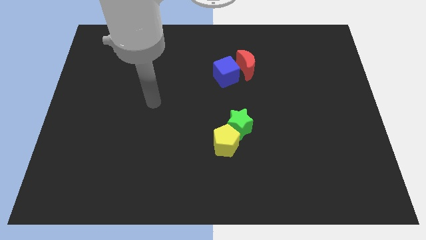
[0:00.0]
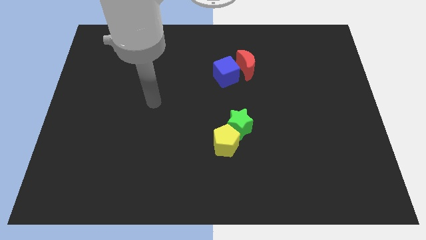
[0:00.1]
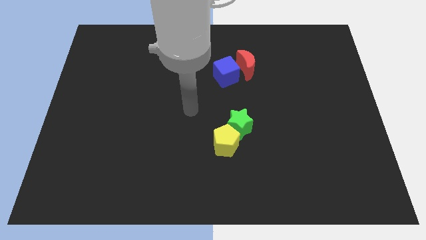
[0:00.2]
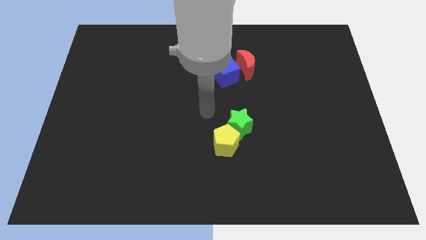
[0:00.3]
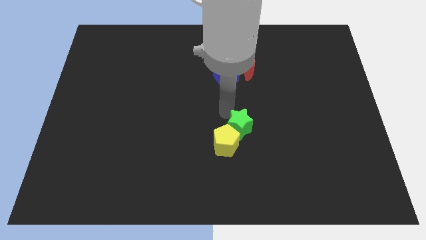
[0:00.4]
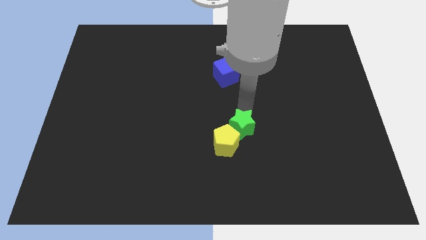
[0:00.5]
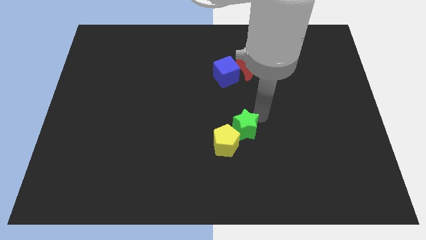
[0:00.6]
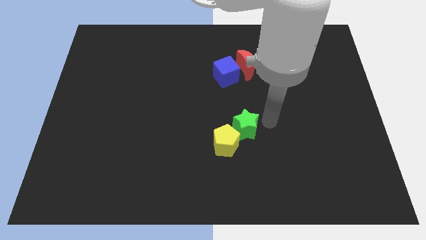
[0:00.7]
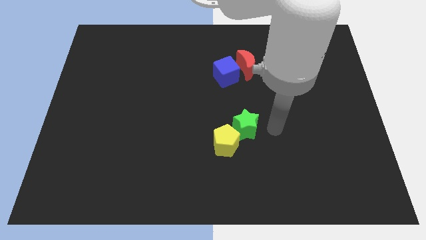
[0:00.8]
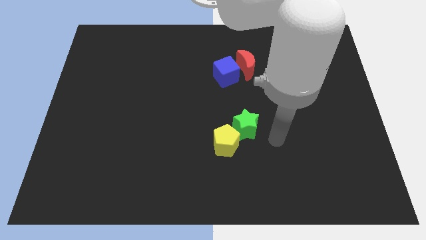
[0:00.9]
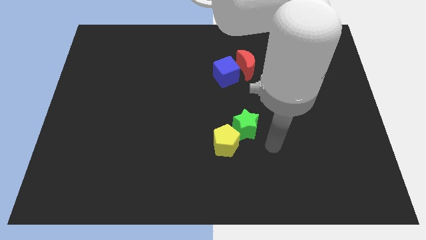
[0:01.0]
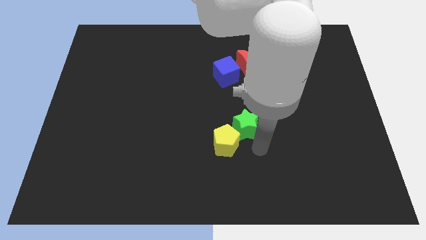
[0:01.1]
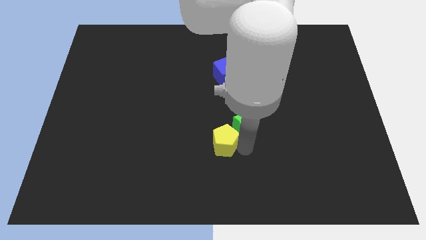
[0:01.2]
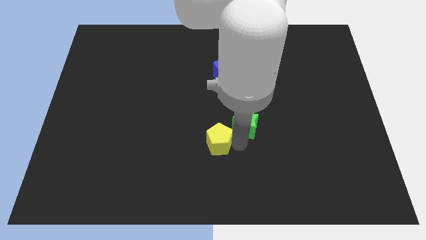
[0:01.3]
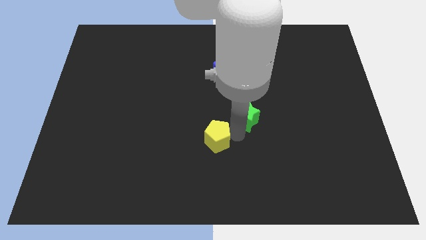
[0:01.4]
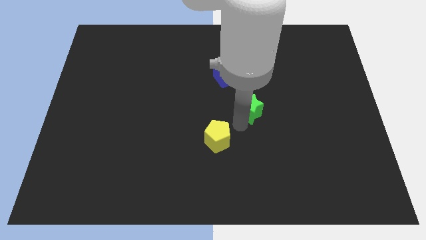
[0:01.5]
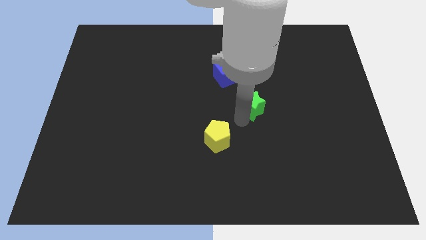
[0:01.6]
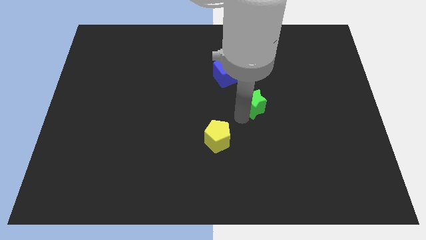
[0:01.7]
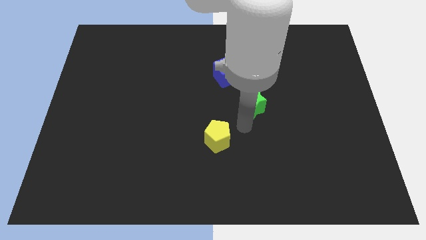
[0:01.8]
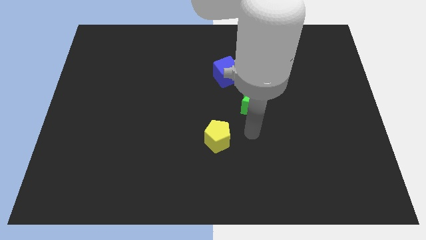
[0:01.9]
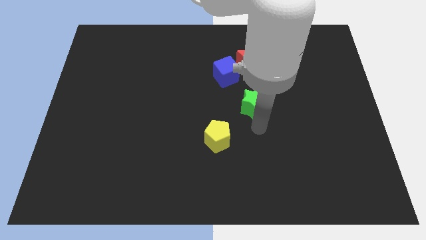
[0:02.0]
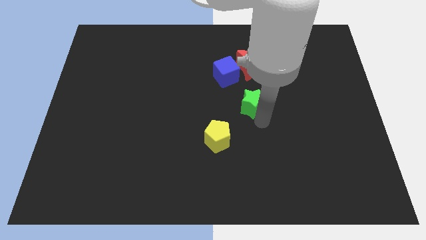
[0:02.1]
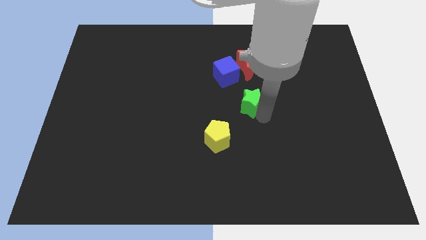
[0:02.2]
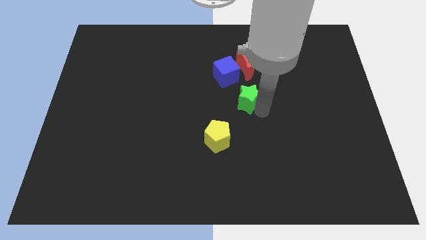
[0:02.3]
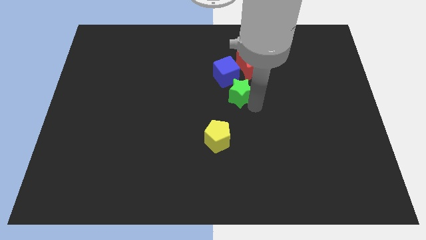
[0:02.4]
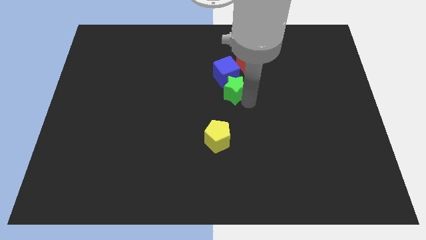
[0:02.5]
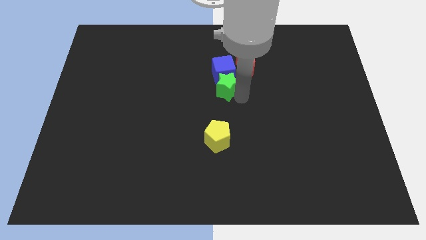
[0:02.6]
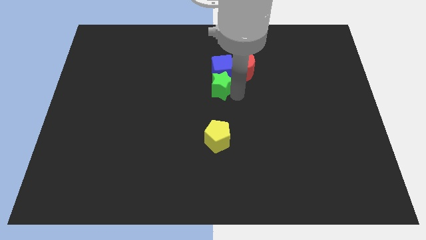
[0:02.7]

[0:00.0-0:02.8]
slide the green block close to the cube

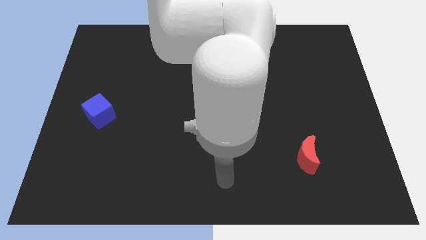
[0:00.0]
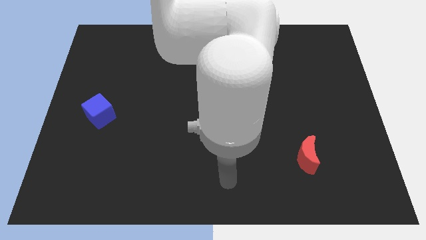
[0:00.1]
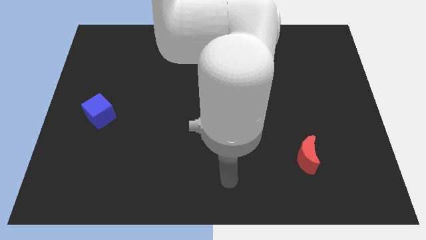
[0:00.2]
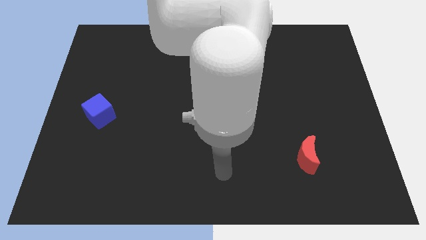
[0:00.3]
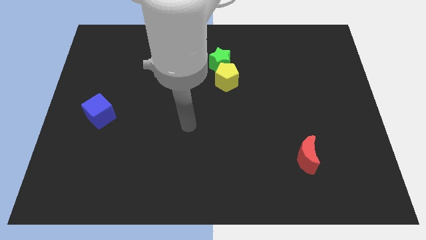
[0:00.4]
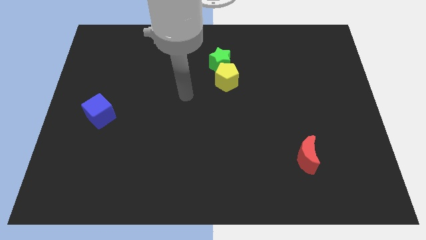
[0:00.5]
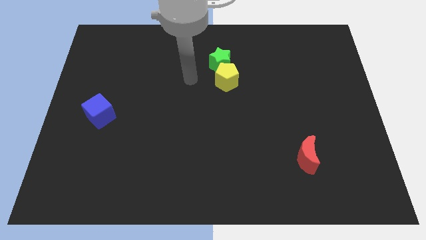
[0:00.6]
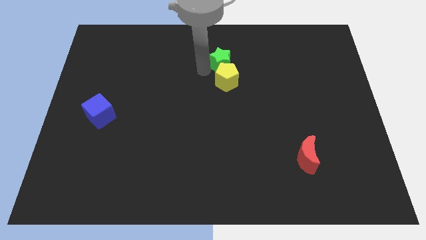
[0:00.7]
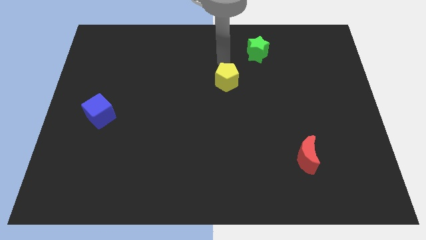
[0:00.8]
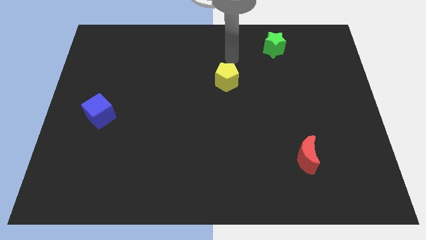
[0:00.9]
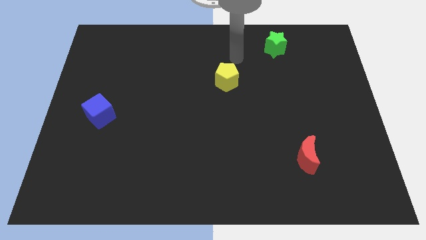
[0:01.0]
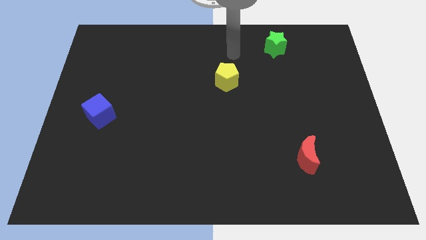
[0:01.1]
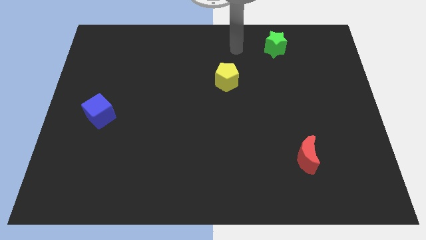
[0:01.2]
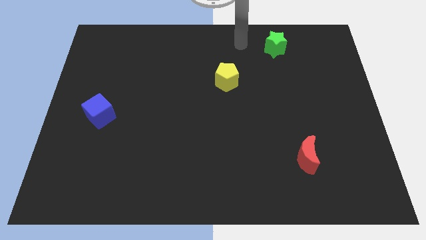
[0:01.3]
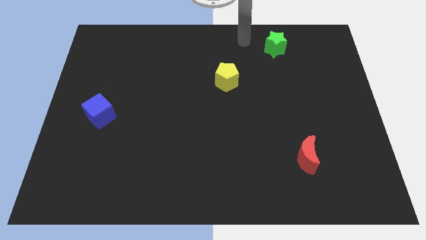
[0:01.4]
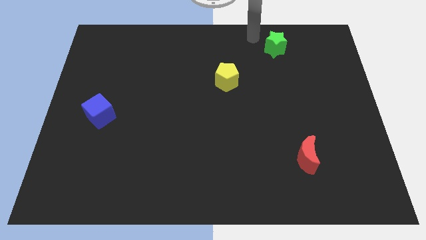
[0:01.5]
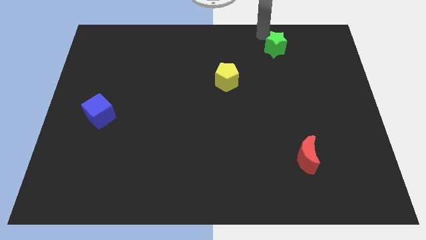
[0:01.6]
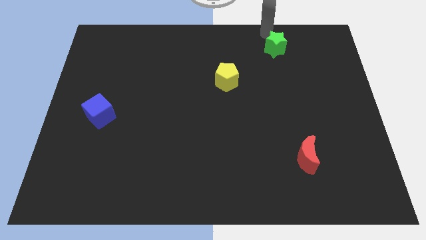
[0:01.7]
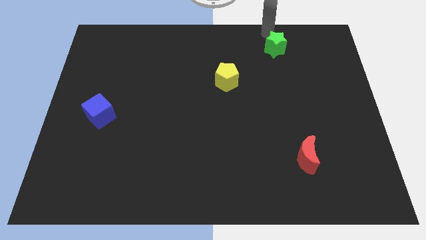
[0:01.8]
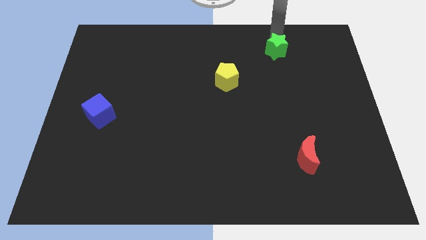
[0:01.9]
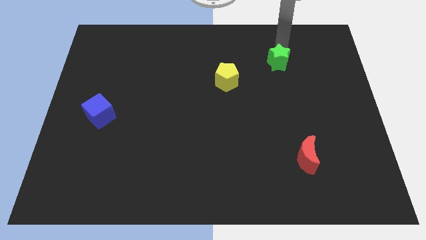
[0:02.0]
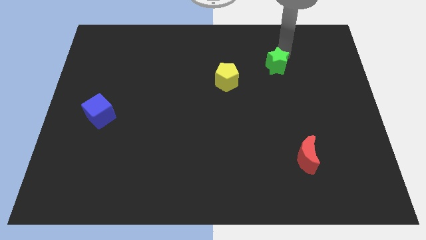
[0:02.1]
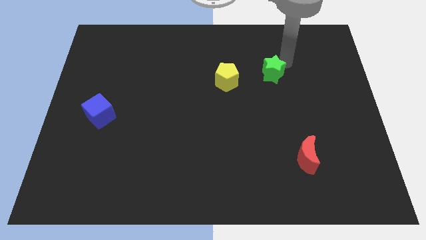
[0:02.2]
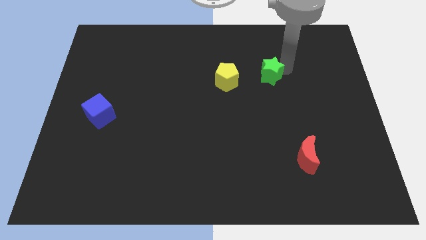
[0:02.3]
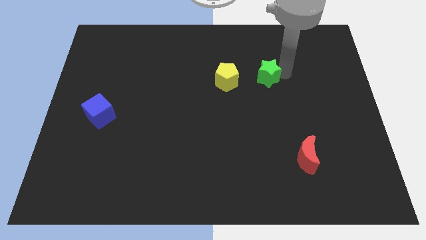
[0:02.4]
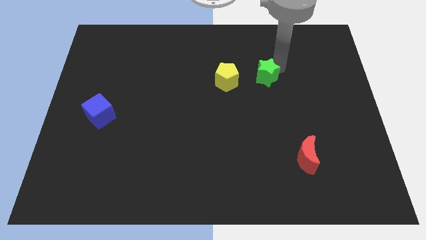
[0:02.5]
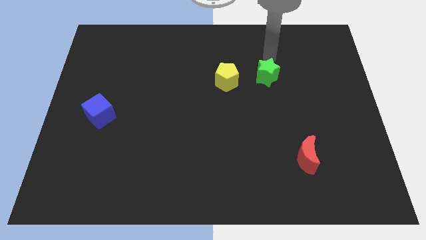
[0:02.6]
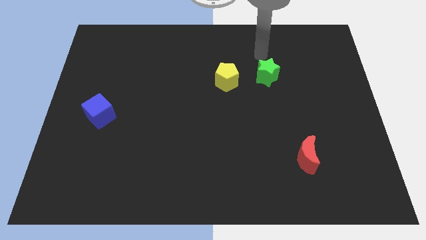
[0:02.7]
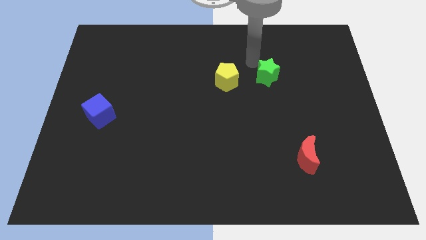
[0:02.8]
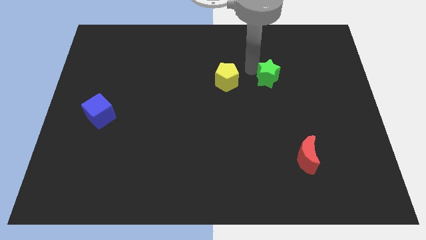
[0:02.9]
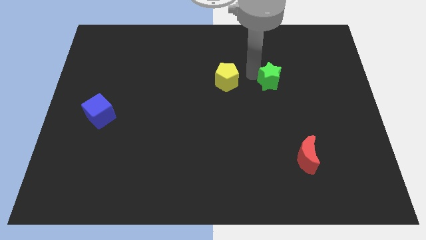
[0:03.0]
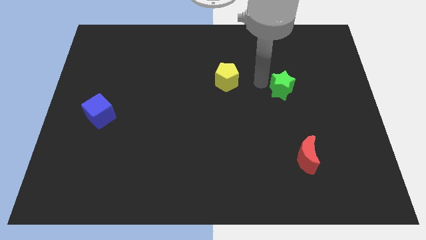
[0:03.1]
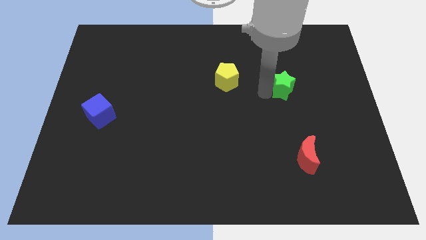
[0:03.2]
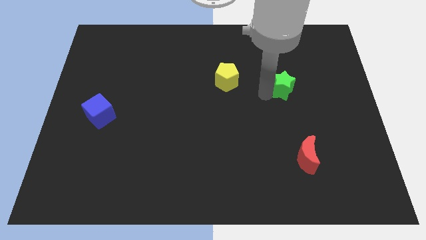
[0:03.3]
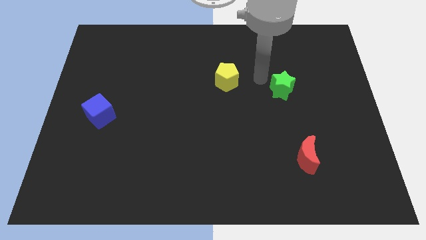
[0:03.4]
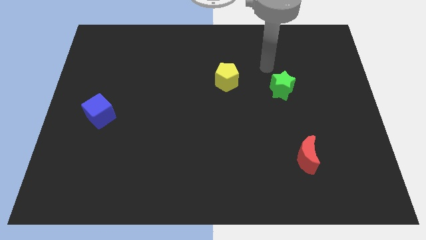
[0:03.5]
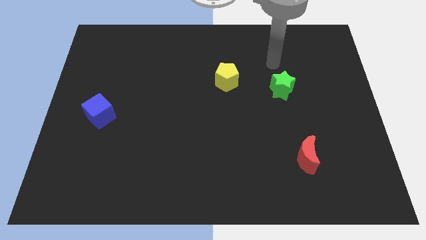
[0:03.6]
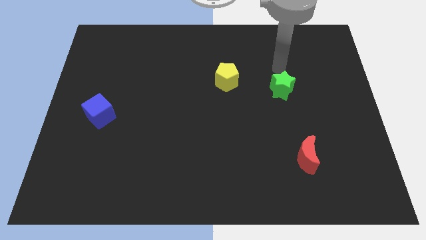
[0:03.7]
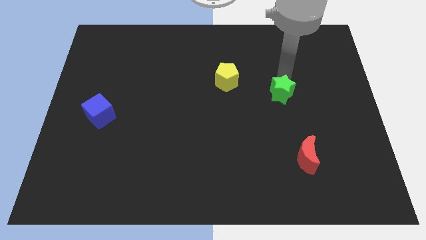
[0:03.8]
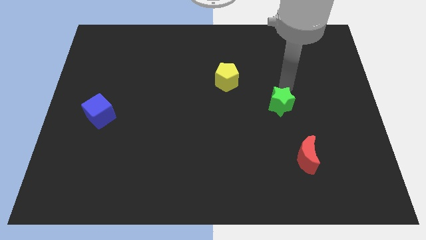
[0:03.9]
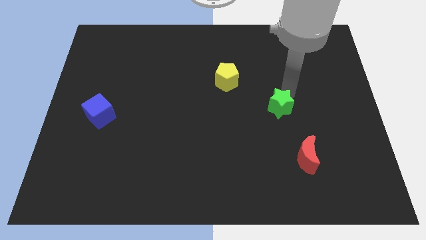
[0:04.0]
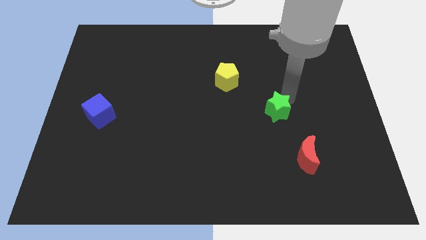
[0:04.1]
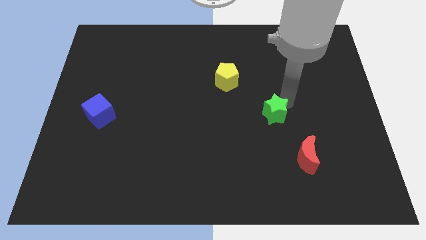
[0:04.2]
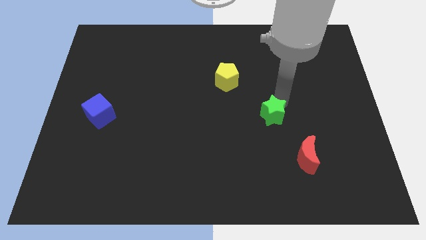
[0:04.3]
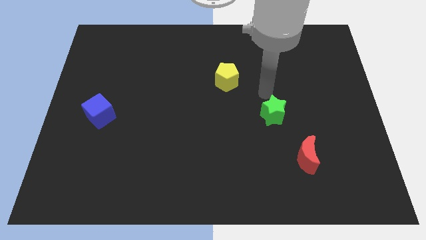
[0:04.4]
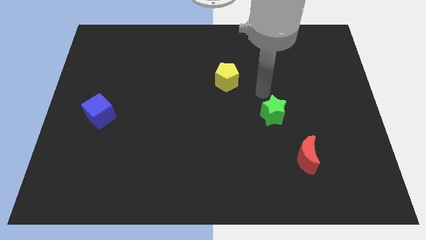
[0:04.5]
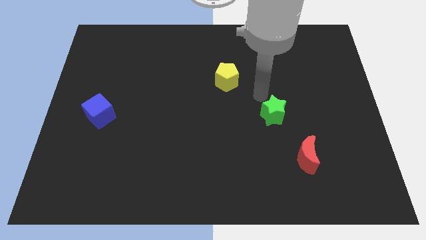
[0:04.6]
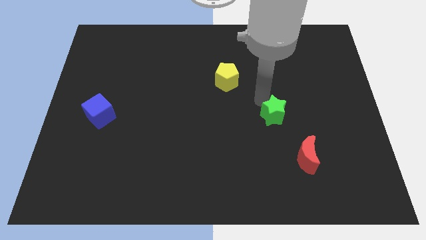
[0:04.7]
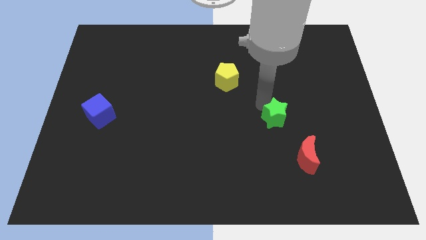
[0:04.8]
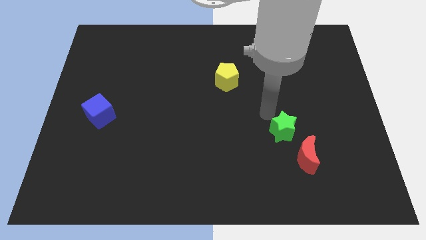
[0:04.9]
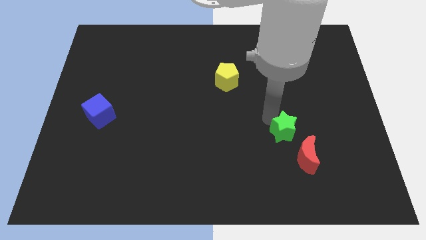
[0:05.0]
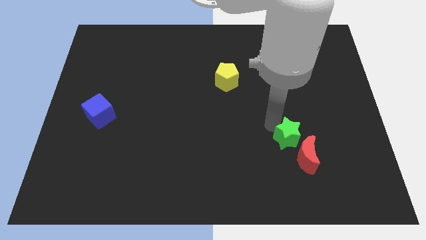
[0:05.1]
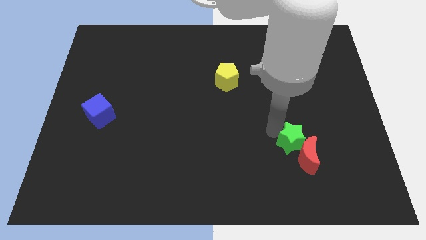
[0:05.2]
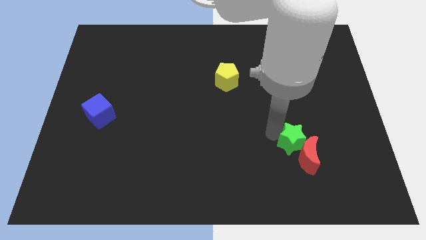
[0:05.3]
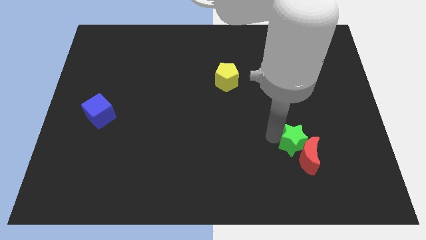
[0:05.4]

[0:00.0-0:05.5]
push the green star towards the moon

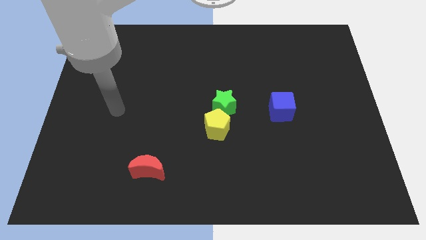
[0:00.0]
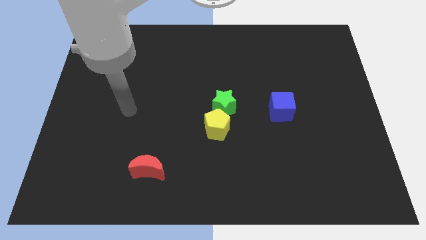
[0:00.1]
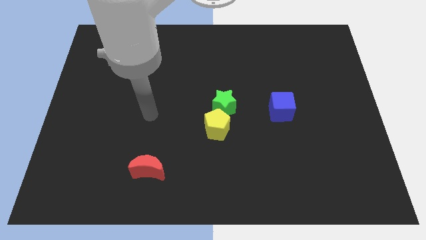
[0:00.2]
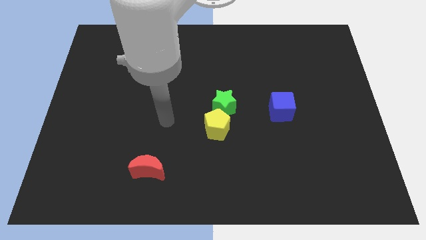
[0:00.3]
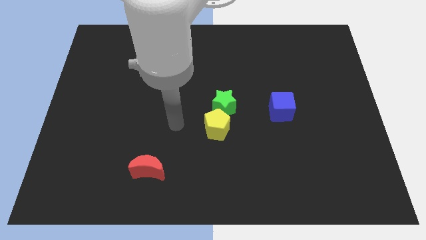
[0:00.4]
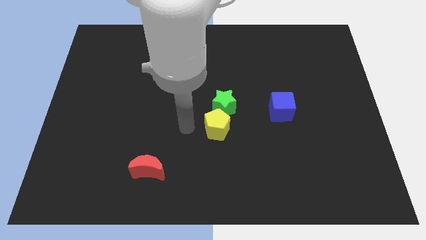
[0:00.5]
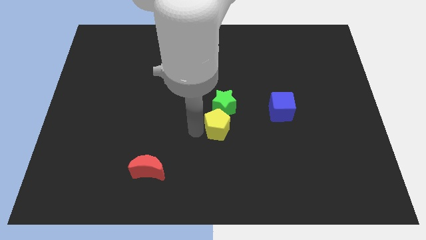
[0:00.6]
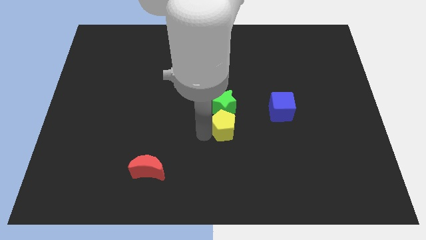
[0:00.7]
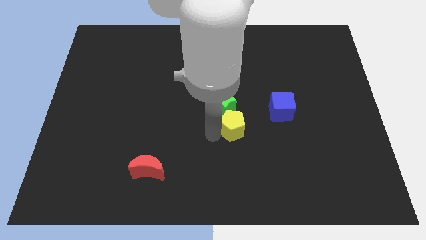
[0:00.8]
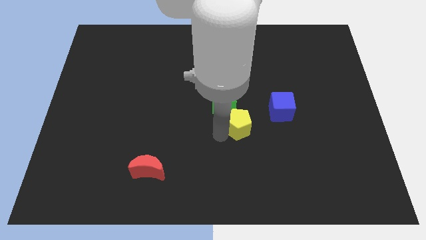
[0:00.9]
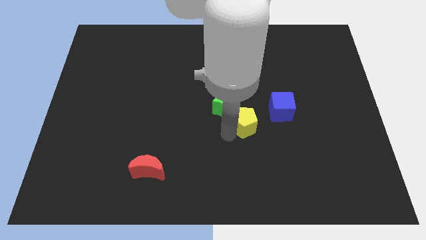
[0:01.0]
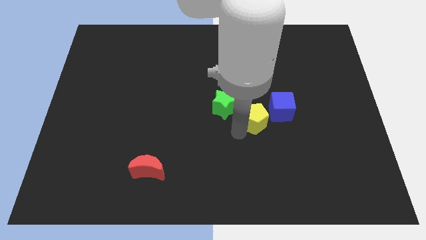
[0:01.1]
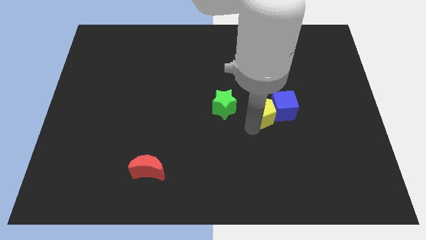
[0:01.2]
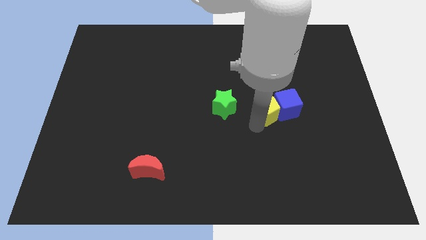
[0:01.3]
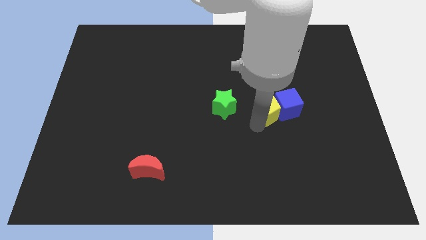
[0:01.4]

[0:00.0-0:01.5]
push the pentagon towards the cube
